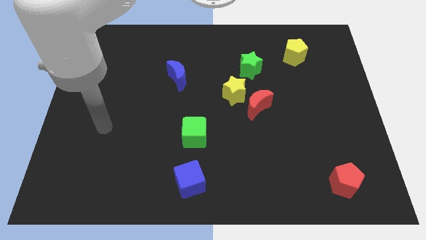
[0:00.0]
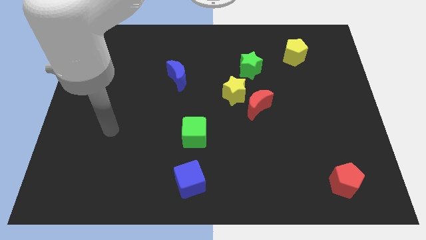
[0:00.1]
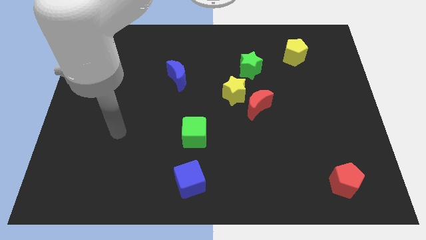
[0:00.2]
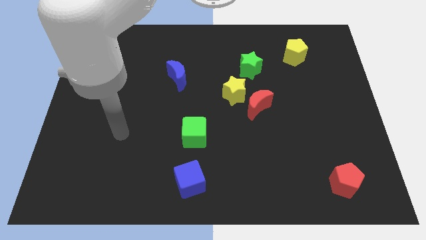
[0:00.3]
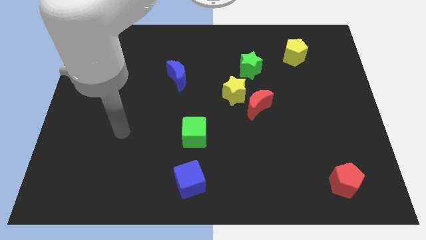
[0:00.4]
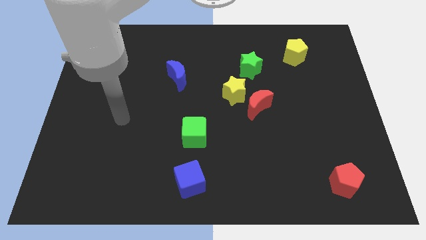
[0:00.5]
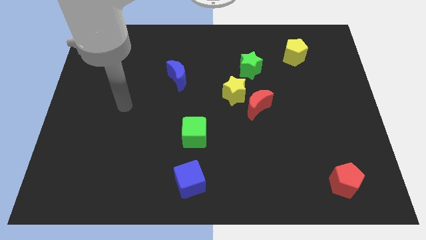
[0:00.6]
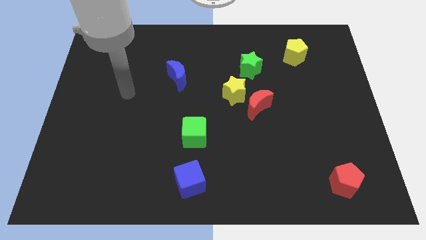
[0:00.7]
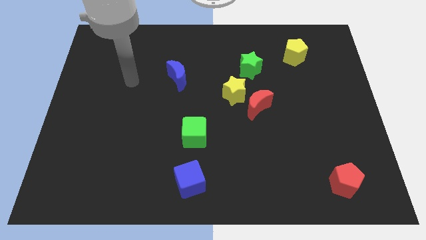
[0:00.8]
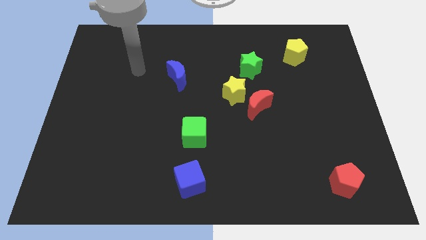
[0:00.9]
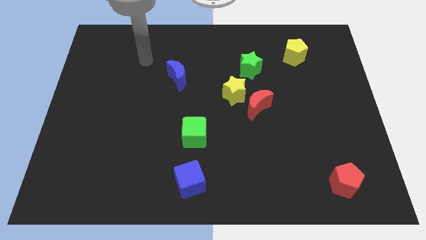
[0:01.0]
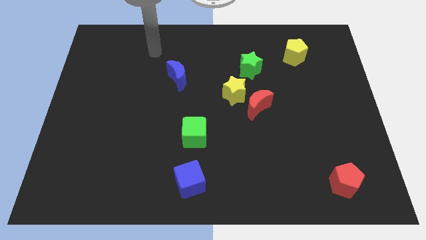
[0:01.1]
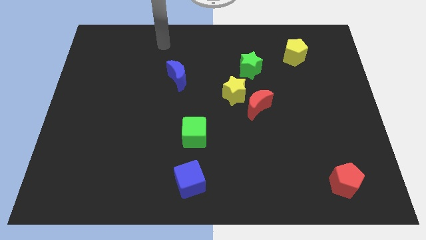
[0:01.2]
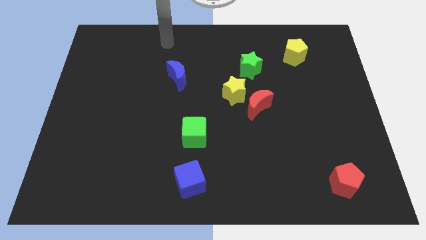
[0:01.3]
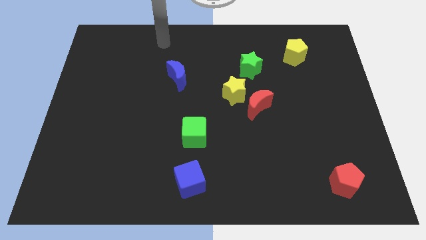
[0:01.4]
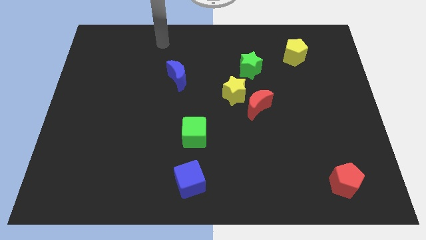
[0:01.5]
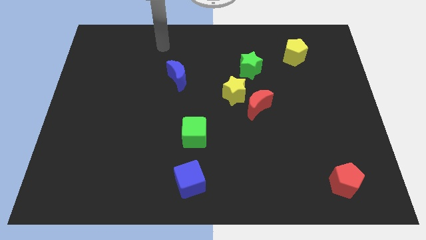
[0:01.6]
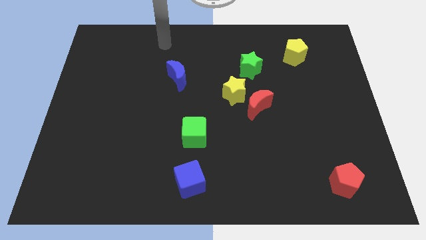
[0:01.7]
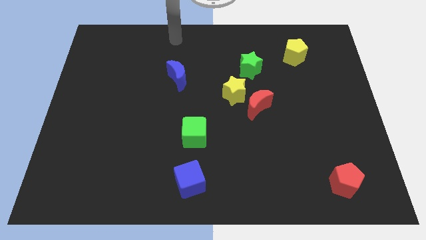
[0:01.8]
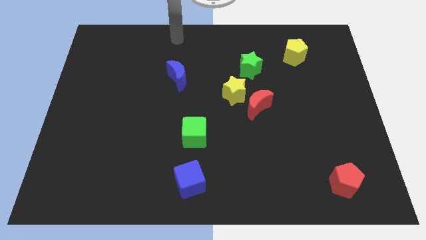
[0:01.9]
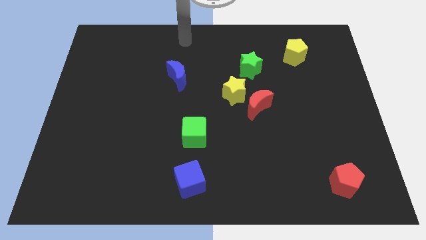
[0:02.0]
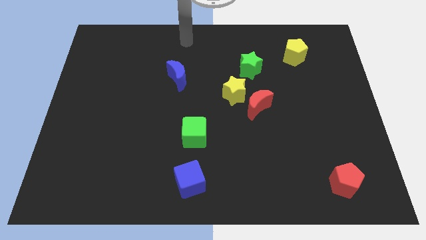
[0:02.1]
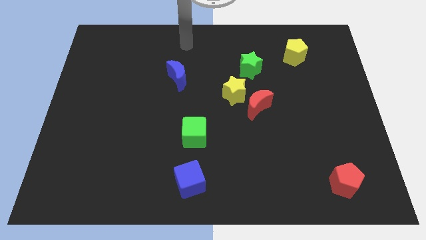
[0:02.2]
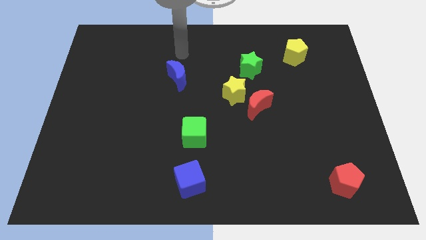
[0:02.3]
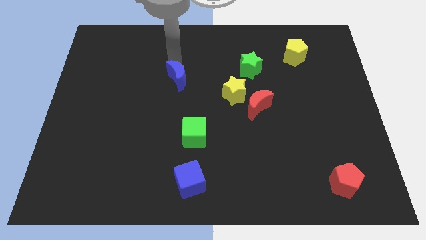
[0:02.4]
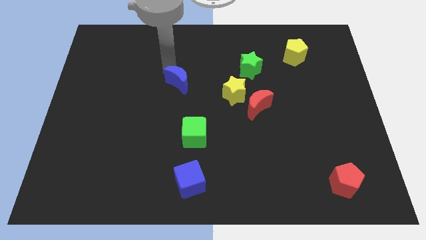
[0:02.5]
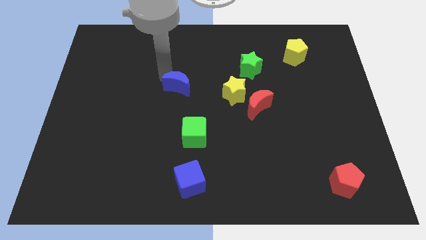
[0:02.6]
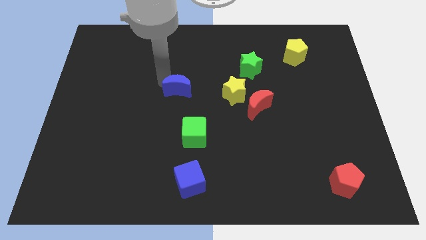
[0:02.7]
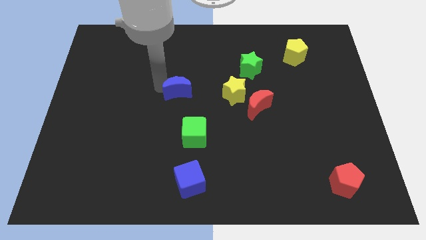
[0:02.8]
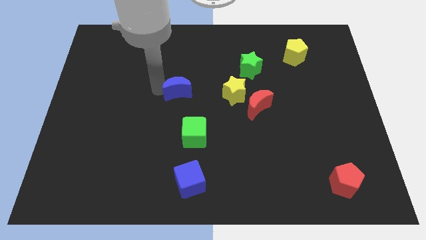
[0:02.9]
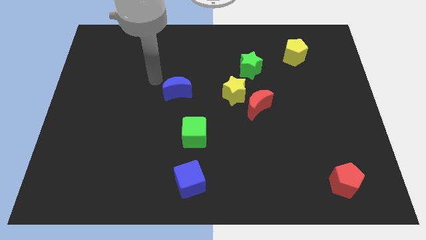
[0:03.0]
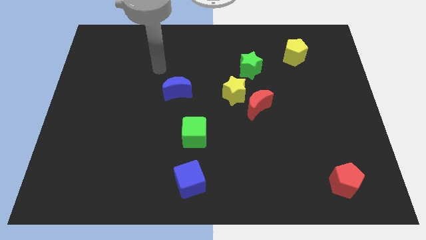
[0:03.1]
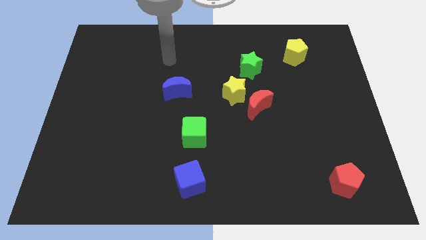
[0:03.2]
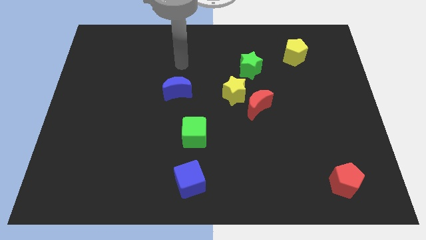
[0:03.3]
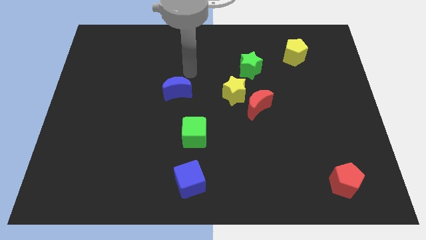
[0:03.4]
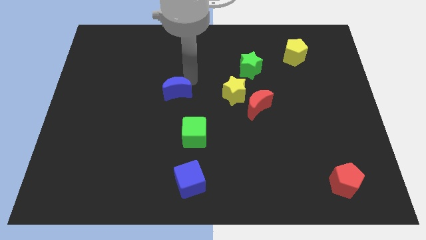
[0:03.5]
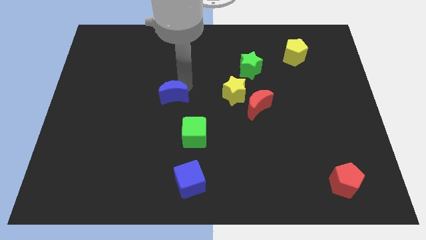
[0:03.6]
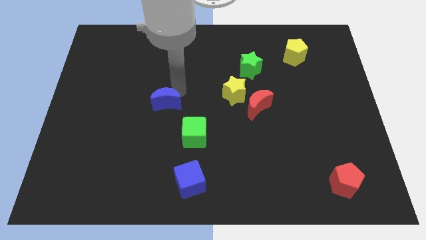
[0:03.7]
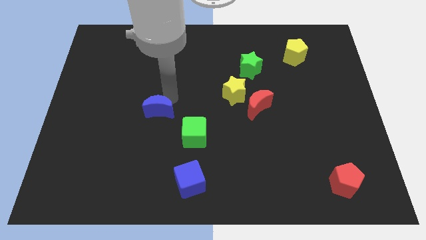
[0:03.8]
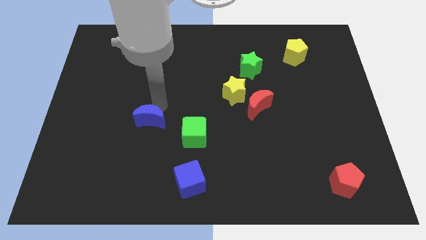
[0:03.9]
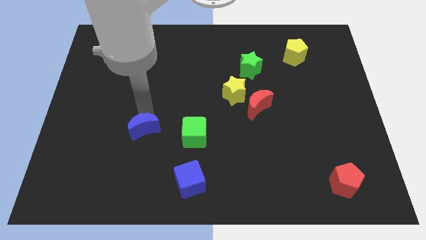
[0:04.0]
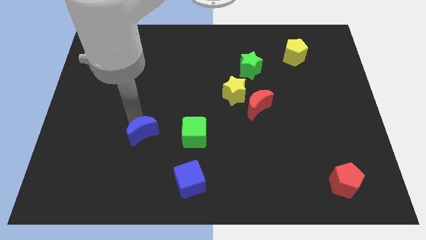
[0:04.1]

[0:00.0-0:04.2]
place the blue cube to the left of the green cube

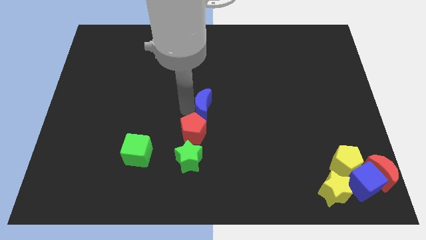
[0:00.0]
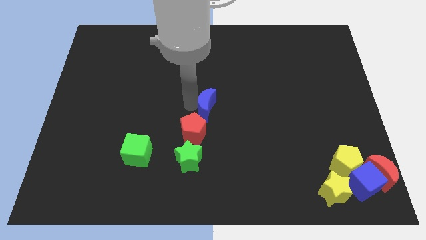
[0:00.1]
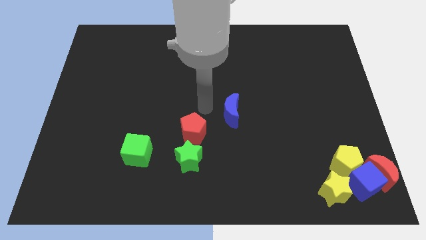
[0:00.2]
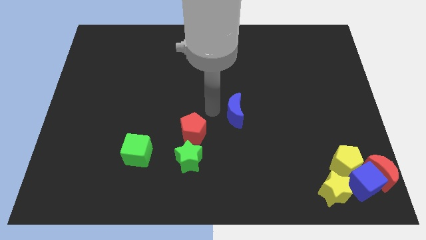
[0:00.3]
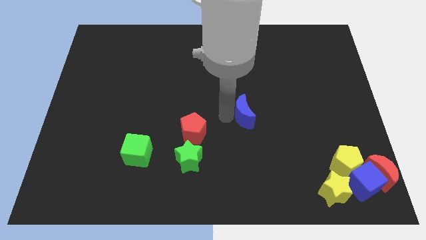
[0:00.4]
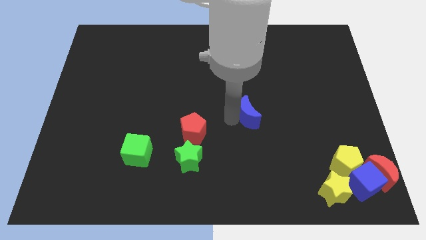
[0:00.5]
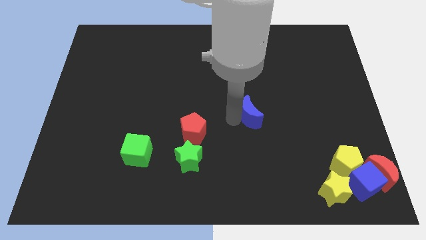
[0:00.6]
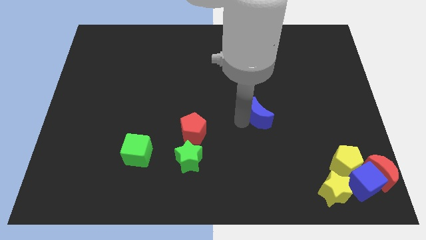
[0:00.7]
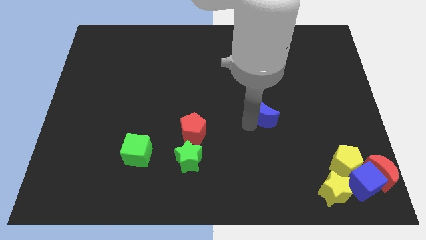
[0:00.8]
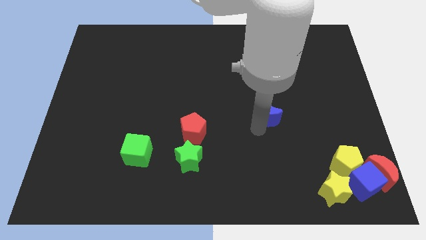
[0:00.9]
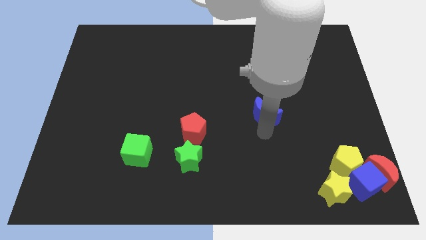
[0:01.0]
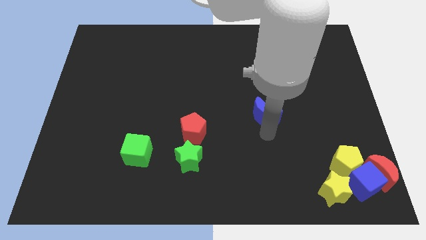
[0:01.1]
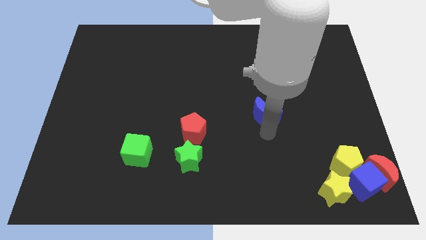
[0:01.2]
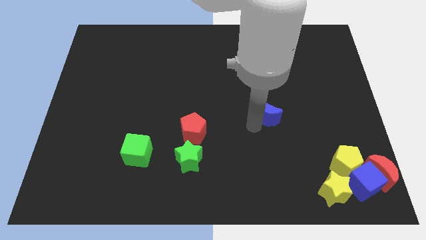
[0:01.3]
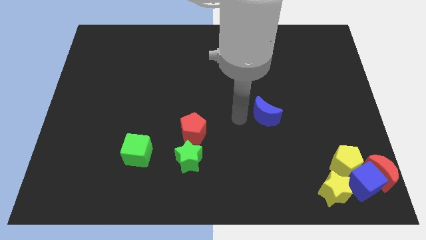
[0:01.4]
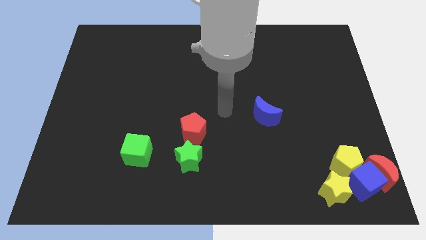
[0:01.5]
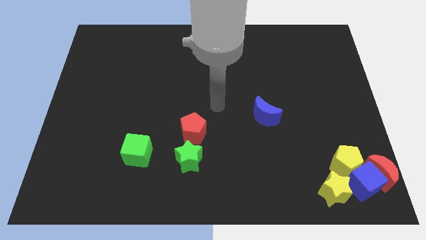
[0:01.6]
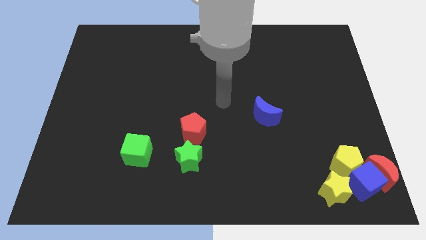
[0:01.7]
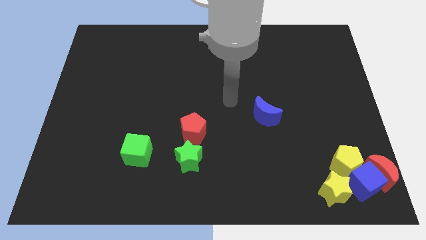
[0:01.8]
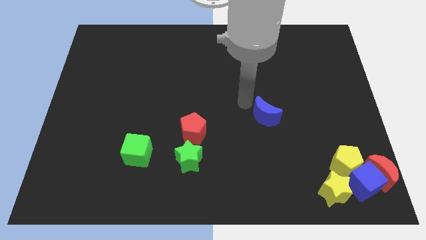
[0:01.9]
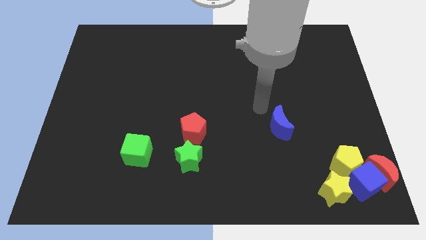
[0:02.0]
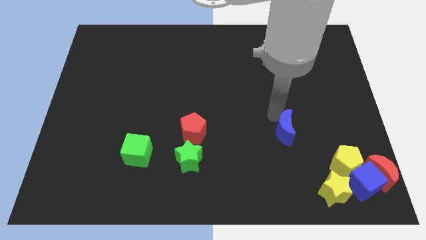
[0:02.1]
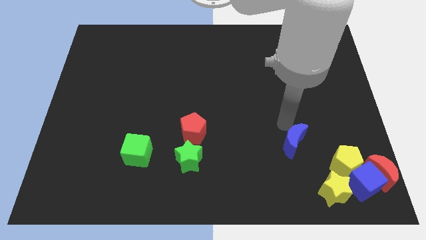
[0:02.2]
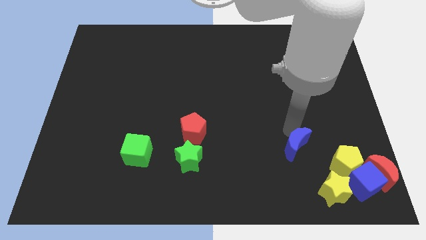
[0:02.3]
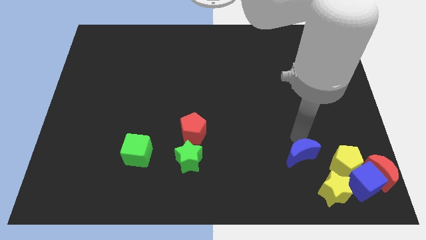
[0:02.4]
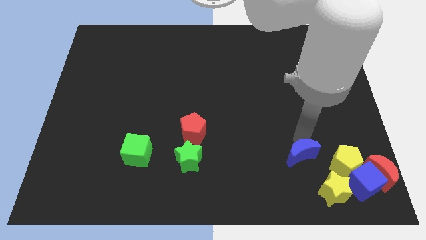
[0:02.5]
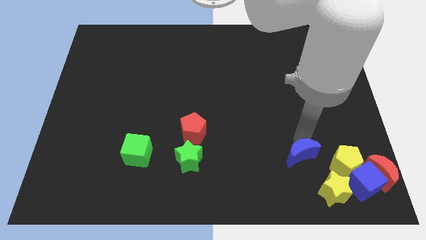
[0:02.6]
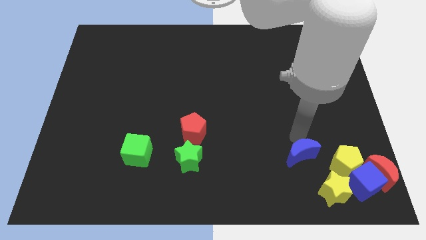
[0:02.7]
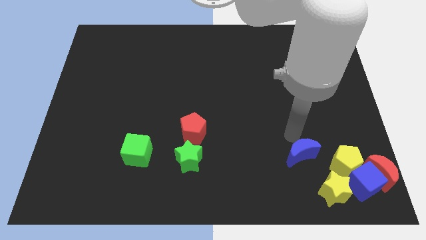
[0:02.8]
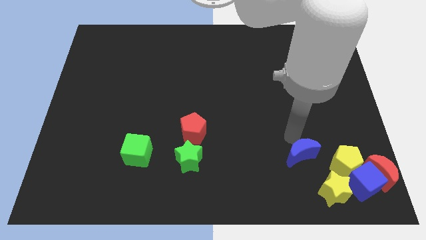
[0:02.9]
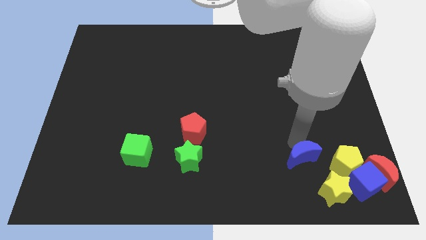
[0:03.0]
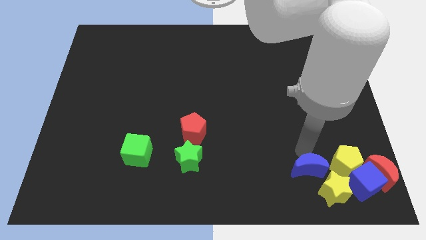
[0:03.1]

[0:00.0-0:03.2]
push the blue crescent towards the left side of the yellow pentagon

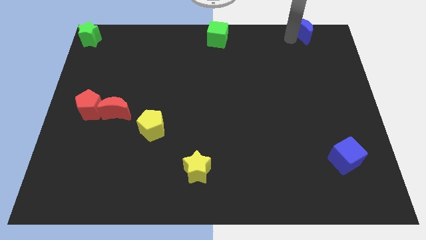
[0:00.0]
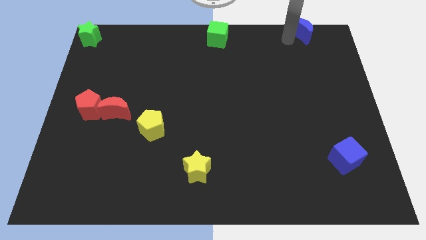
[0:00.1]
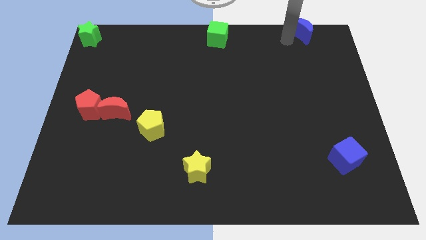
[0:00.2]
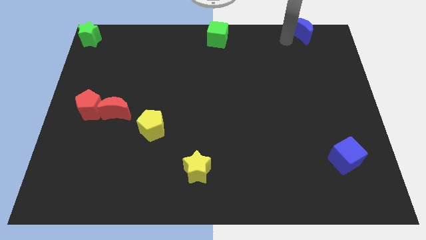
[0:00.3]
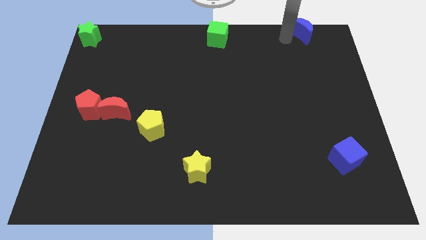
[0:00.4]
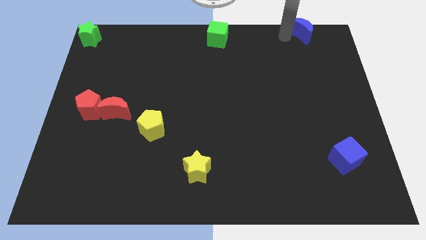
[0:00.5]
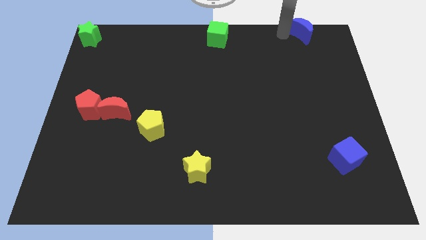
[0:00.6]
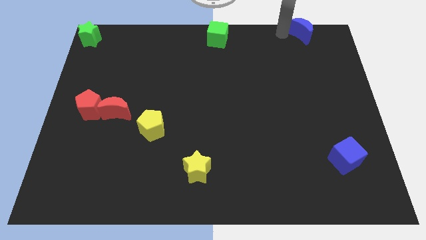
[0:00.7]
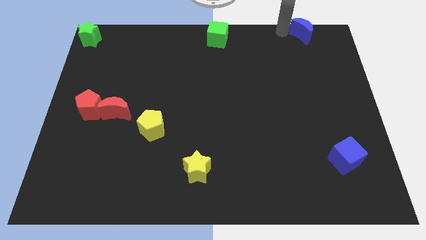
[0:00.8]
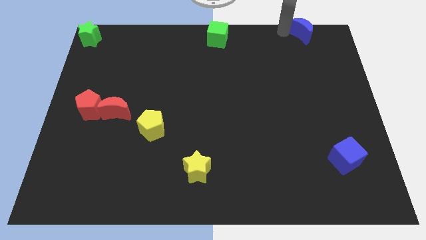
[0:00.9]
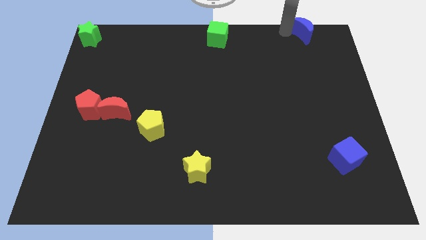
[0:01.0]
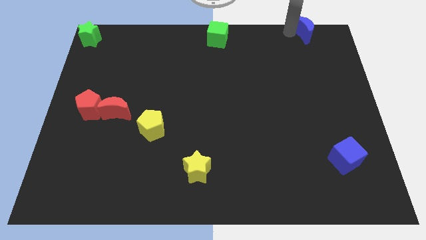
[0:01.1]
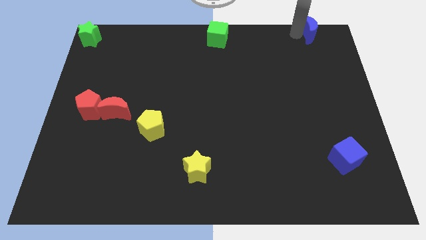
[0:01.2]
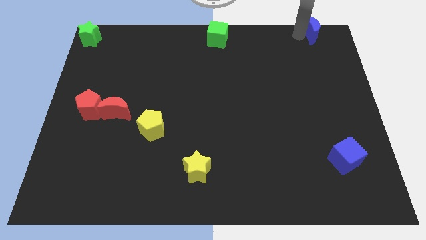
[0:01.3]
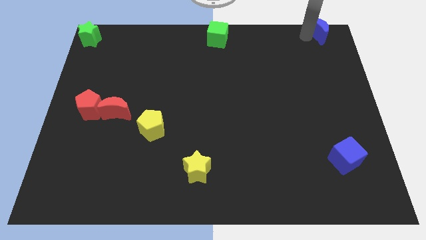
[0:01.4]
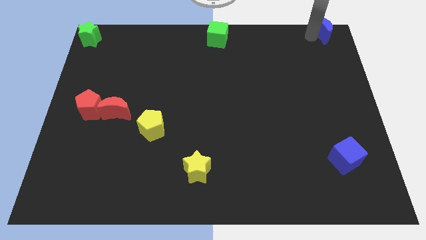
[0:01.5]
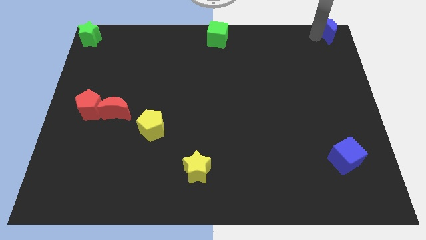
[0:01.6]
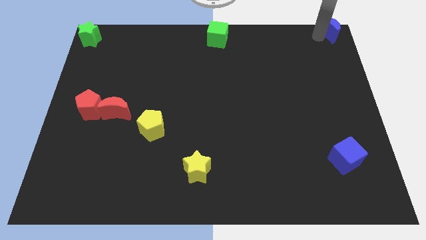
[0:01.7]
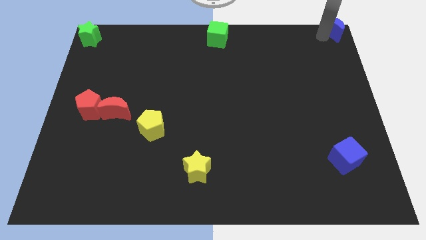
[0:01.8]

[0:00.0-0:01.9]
move the blue crescent towards the top right corner of the board
